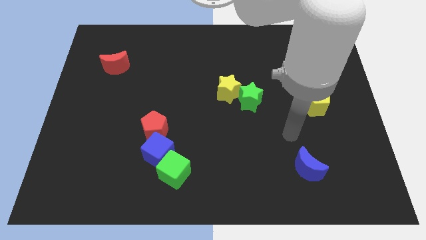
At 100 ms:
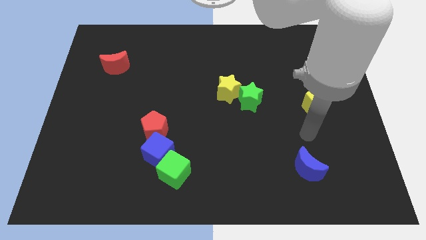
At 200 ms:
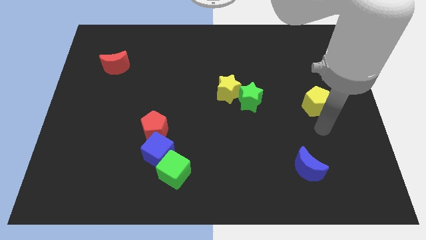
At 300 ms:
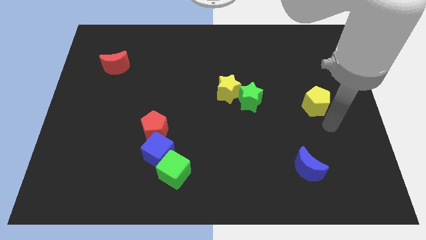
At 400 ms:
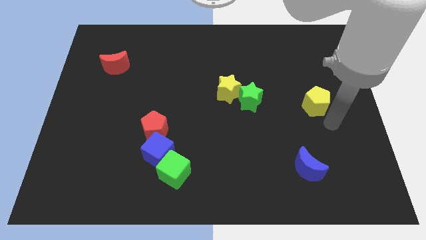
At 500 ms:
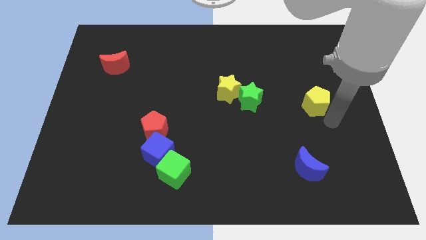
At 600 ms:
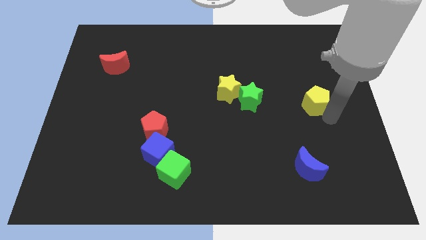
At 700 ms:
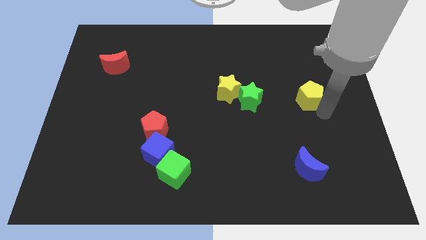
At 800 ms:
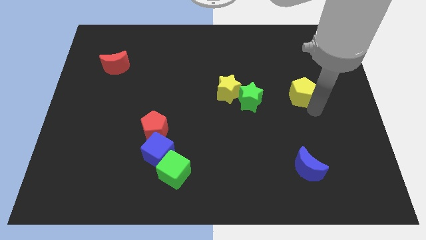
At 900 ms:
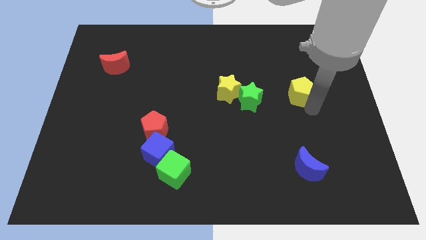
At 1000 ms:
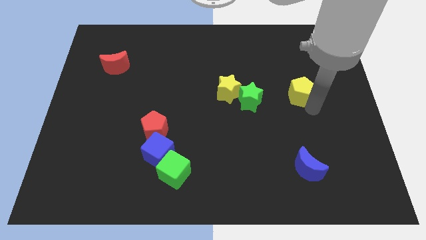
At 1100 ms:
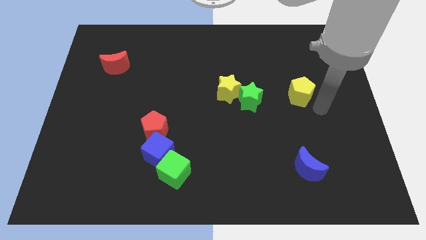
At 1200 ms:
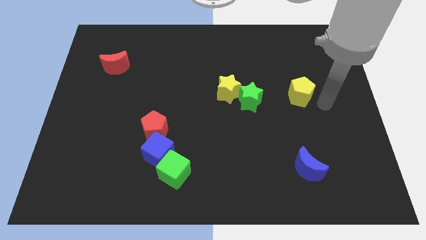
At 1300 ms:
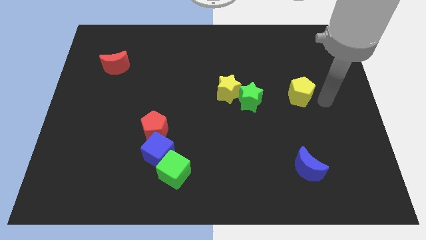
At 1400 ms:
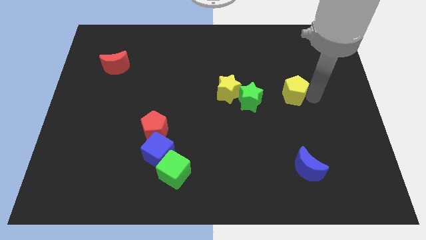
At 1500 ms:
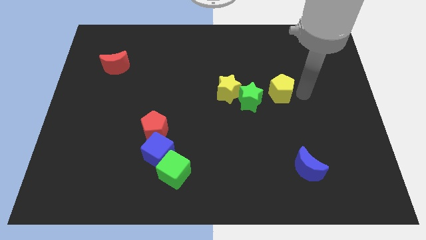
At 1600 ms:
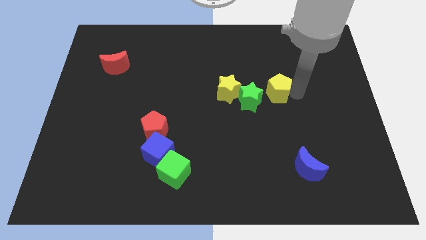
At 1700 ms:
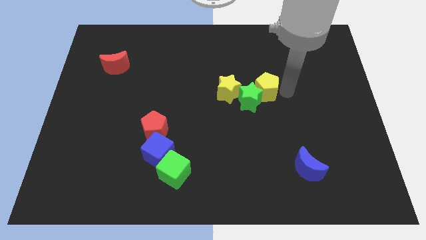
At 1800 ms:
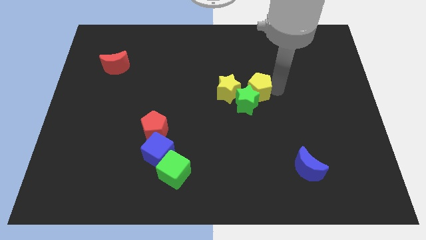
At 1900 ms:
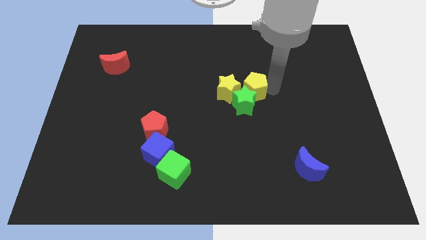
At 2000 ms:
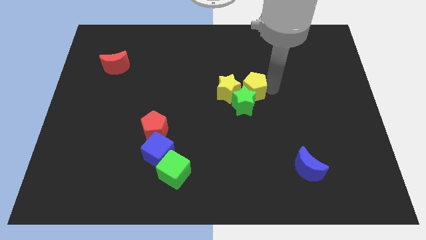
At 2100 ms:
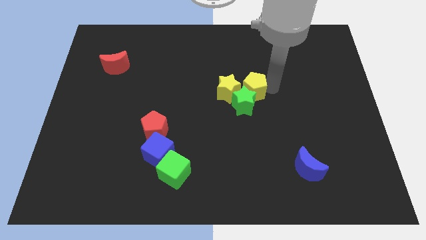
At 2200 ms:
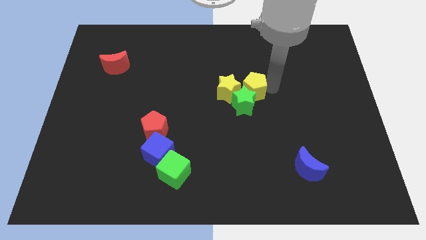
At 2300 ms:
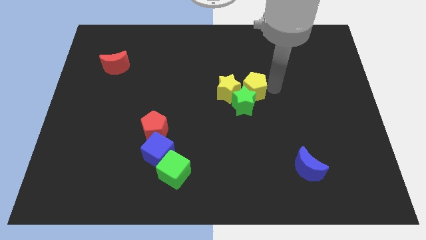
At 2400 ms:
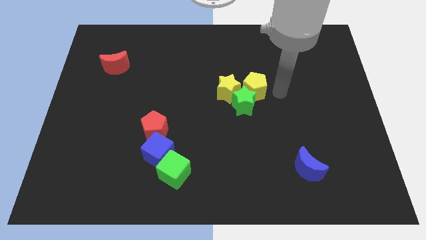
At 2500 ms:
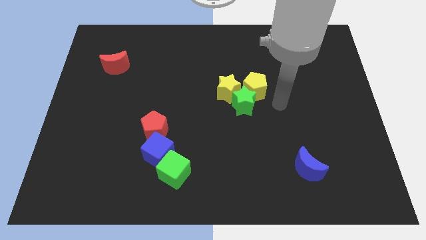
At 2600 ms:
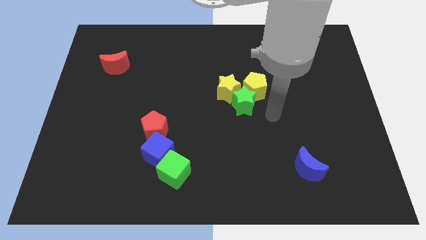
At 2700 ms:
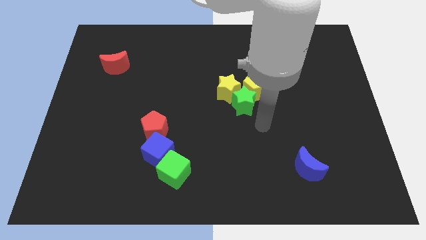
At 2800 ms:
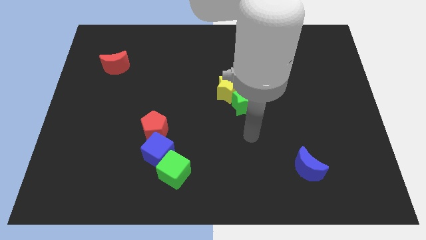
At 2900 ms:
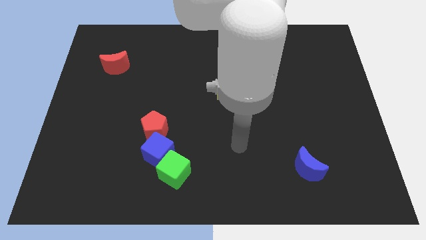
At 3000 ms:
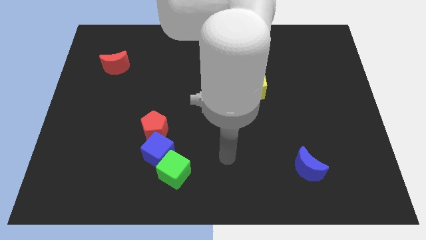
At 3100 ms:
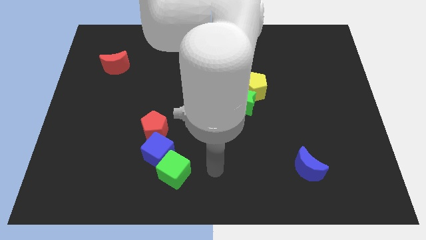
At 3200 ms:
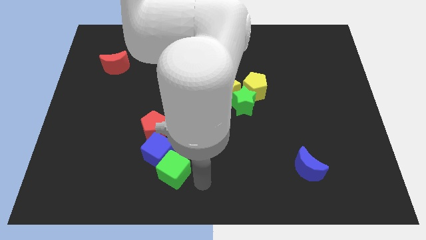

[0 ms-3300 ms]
place the yellow pentagon to the top side of the green star

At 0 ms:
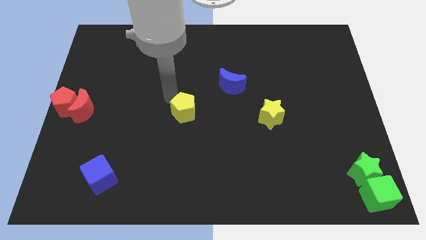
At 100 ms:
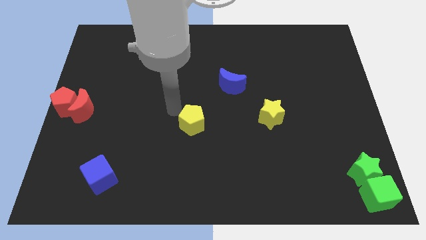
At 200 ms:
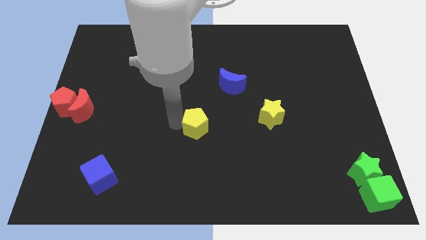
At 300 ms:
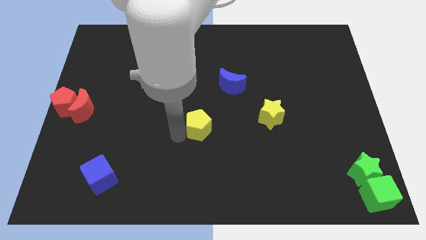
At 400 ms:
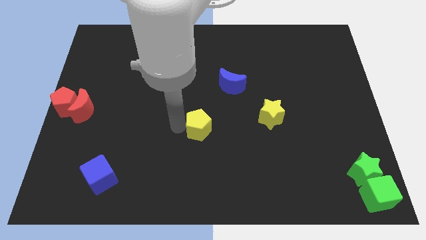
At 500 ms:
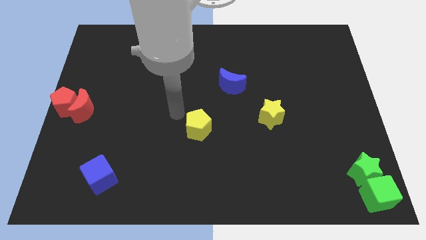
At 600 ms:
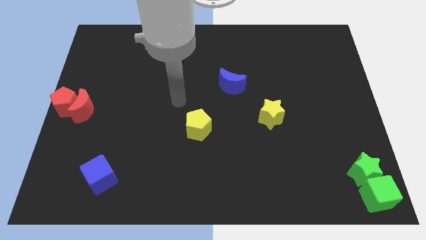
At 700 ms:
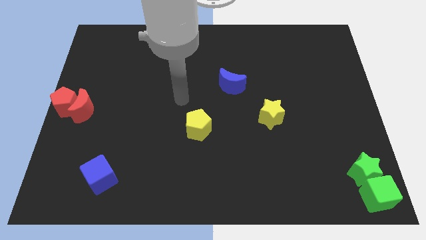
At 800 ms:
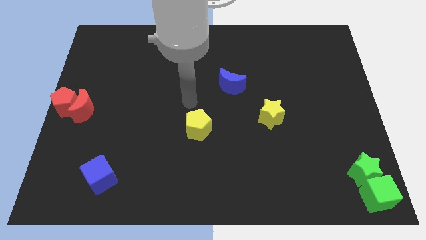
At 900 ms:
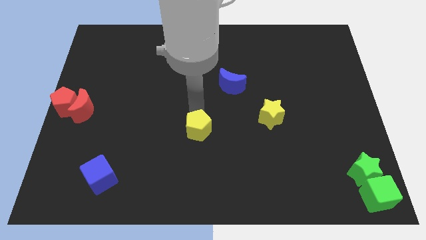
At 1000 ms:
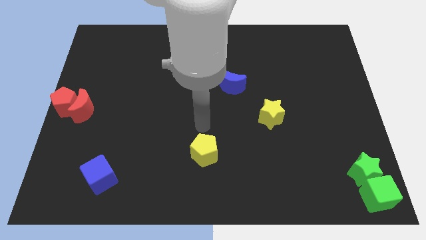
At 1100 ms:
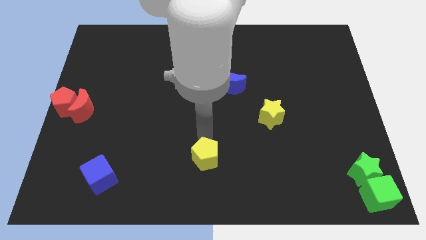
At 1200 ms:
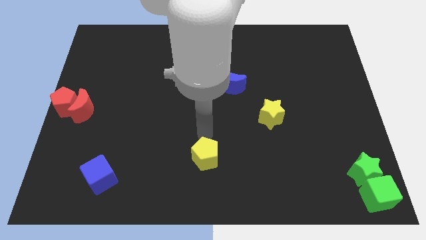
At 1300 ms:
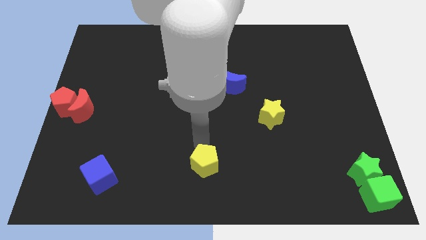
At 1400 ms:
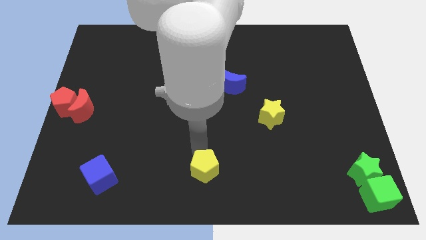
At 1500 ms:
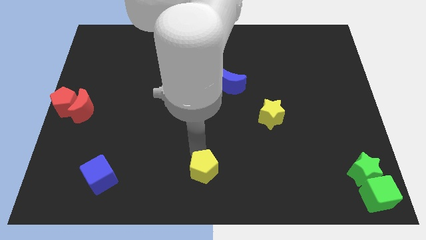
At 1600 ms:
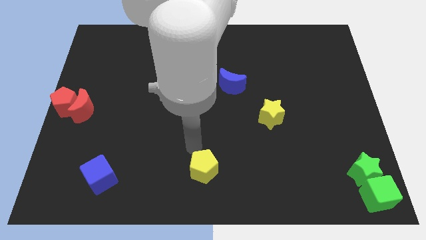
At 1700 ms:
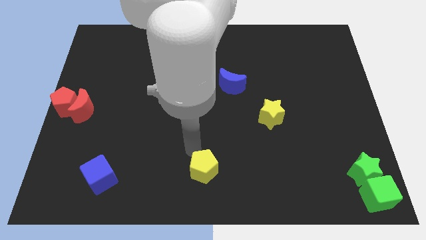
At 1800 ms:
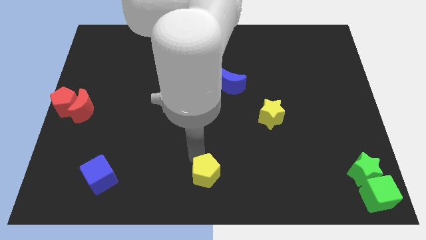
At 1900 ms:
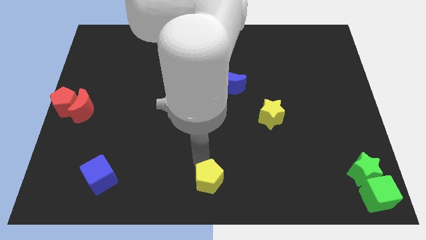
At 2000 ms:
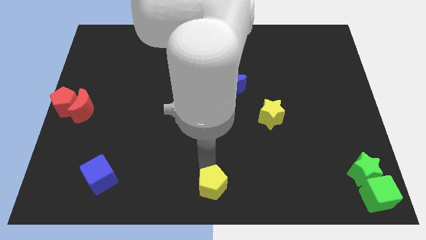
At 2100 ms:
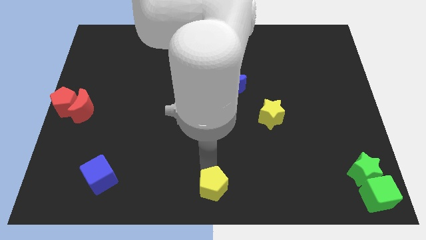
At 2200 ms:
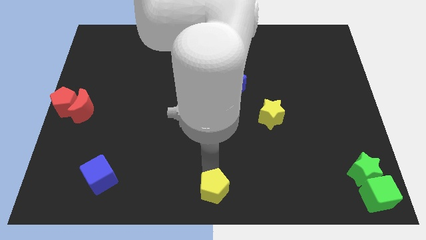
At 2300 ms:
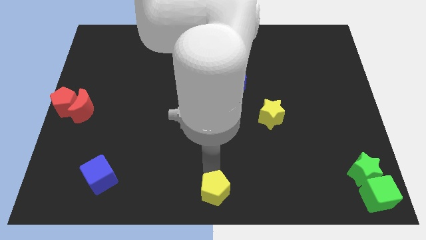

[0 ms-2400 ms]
place the yellow pentagon to the bottom center of the board

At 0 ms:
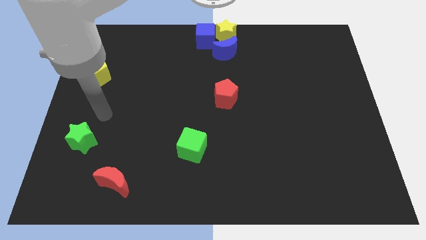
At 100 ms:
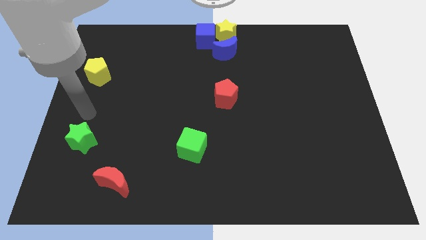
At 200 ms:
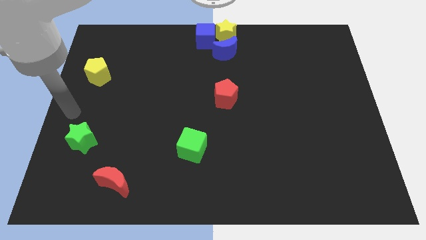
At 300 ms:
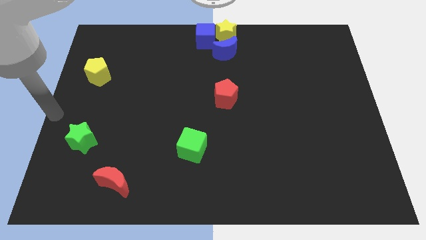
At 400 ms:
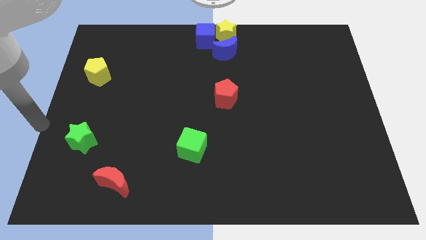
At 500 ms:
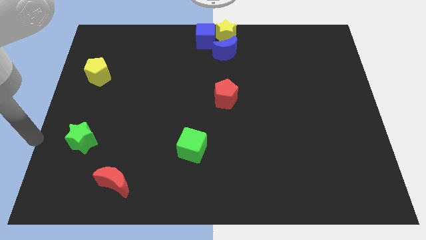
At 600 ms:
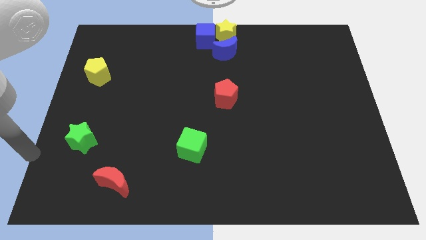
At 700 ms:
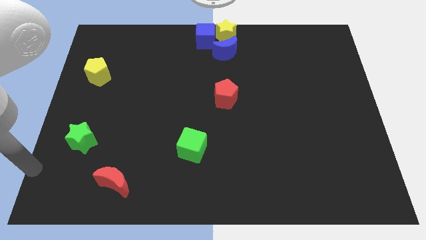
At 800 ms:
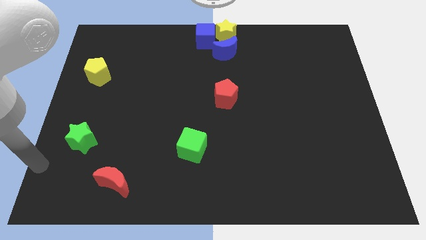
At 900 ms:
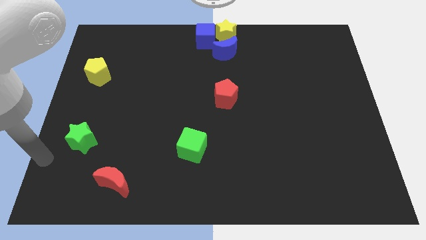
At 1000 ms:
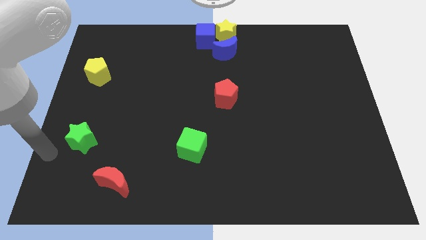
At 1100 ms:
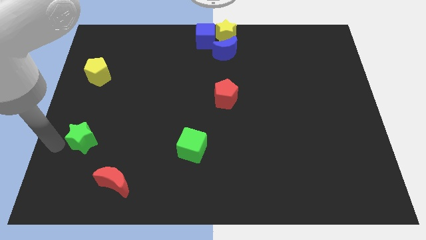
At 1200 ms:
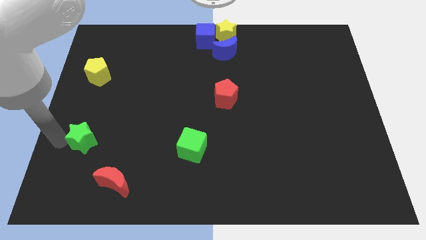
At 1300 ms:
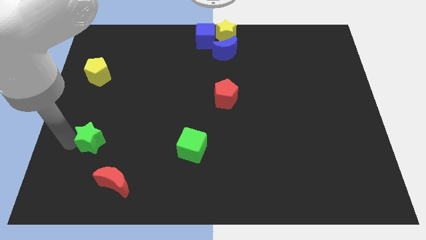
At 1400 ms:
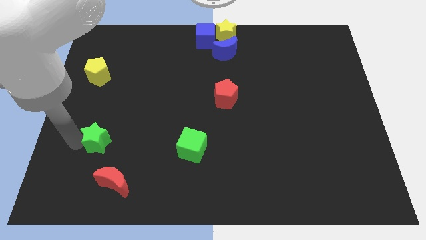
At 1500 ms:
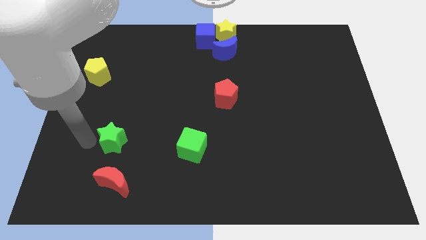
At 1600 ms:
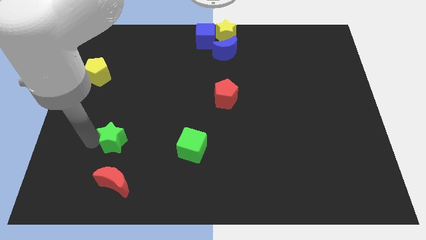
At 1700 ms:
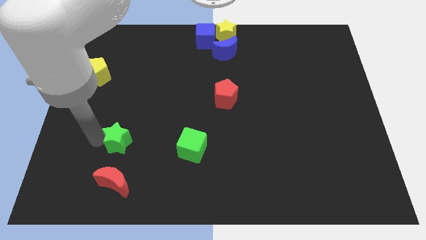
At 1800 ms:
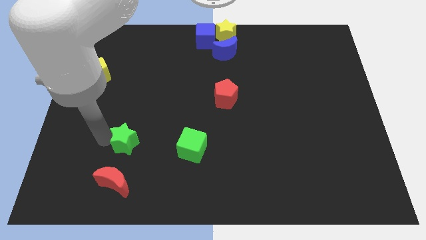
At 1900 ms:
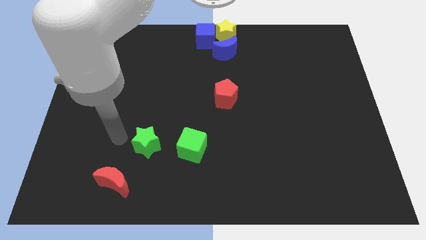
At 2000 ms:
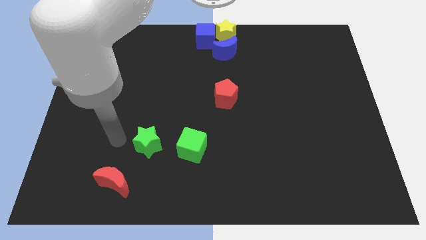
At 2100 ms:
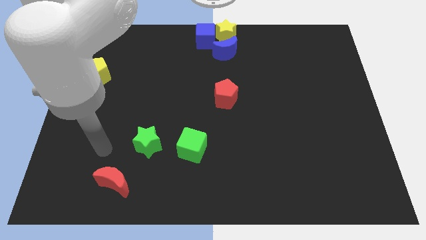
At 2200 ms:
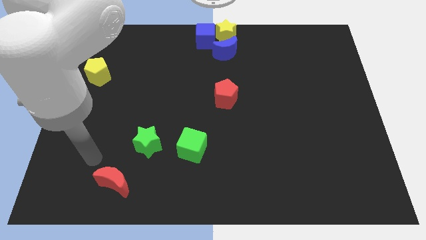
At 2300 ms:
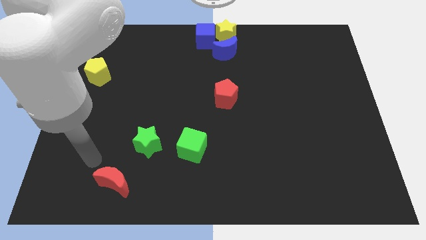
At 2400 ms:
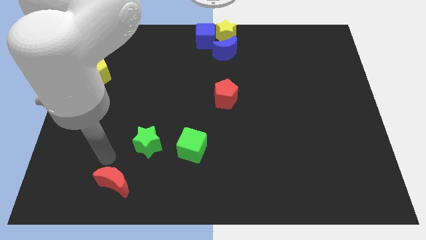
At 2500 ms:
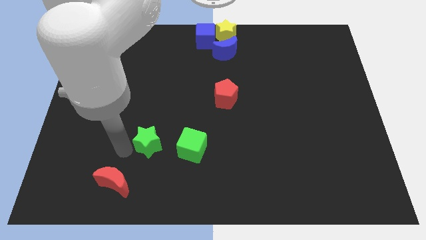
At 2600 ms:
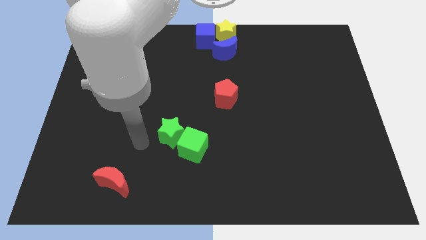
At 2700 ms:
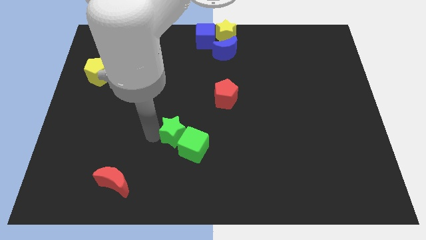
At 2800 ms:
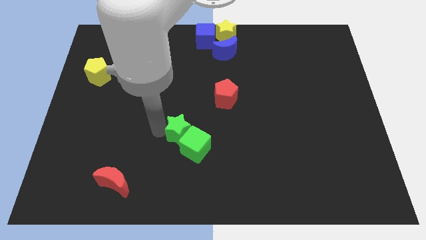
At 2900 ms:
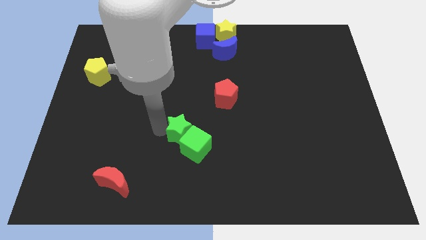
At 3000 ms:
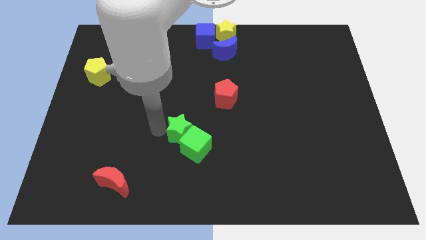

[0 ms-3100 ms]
move the green star into the green cube

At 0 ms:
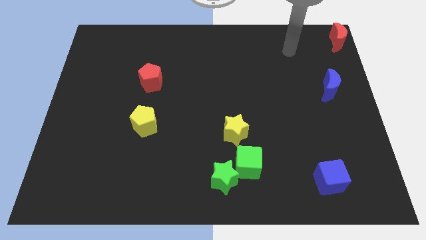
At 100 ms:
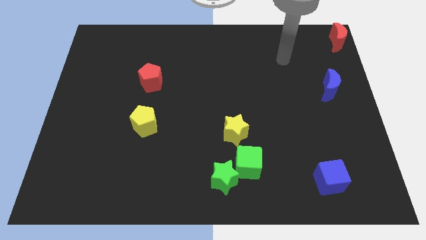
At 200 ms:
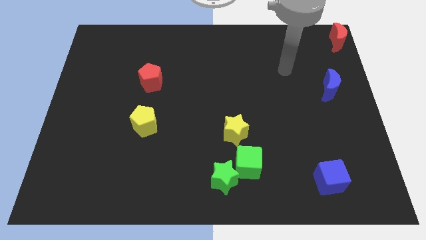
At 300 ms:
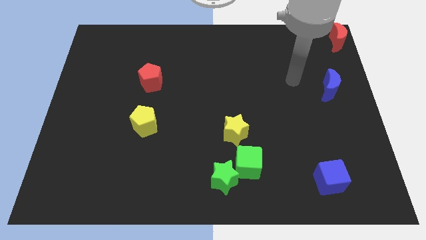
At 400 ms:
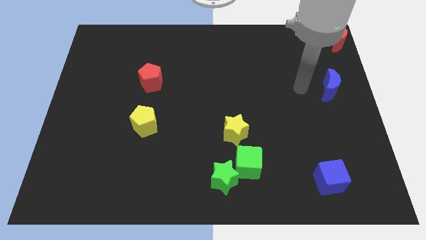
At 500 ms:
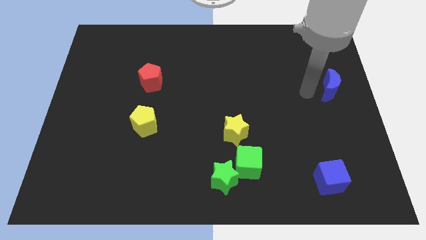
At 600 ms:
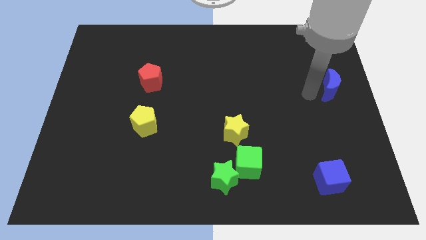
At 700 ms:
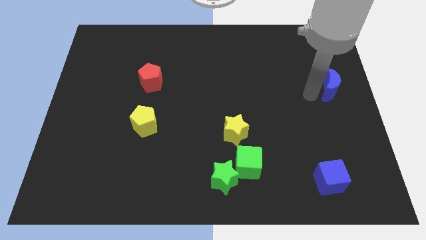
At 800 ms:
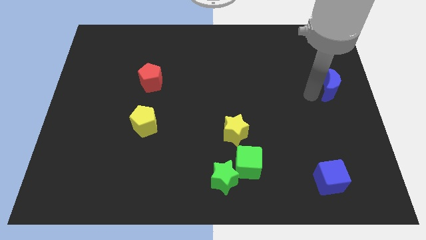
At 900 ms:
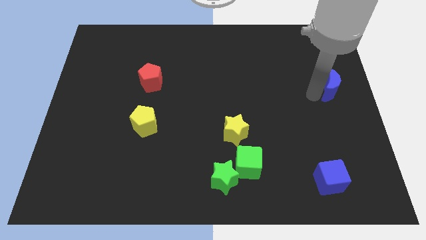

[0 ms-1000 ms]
point your arm left blue moon
